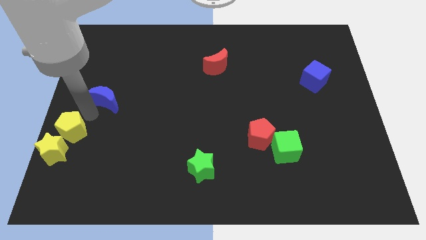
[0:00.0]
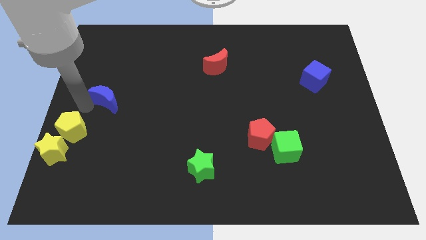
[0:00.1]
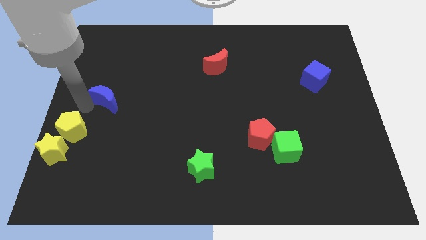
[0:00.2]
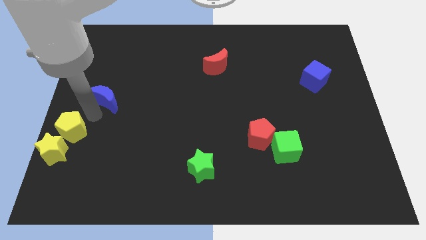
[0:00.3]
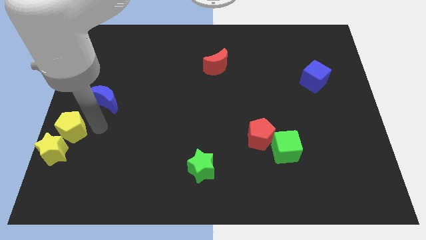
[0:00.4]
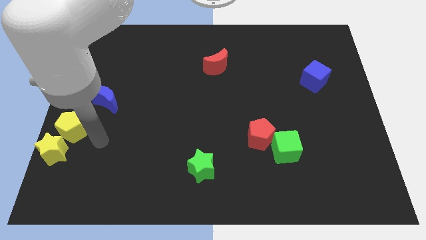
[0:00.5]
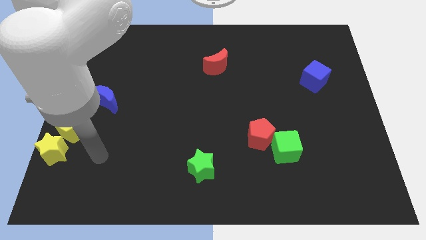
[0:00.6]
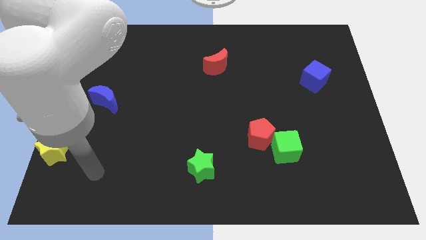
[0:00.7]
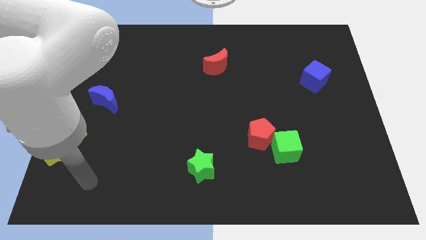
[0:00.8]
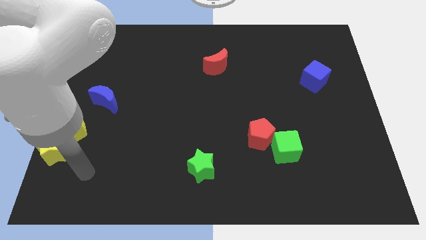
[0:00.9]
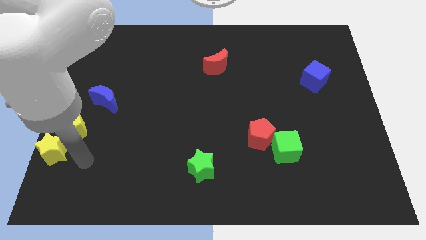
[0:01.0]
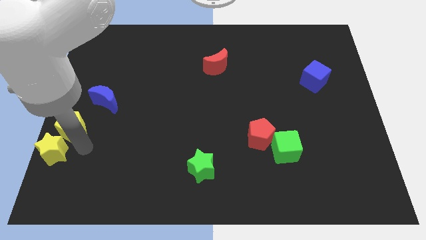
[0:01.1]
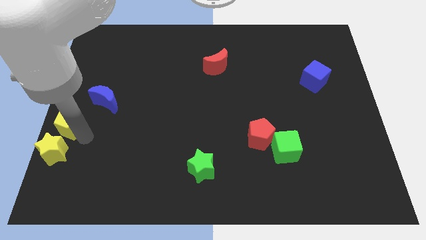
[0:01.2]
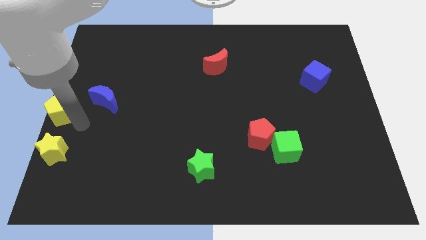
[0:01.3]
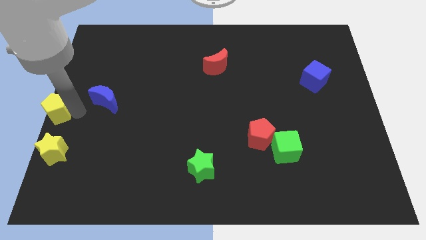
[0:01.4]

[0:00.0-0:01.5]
place the yellow pentagon on the top of the yellow star

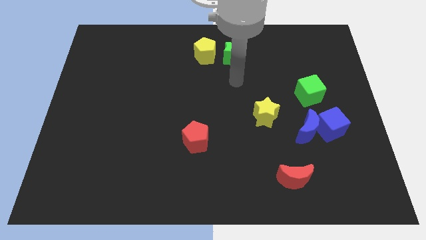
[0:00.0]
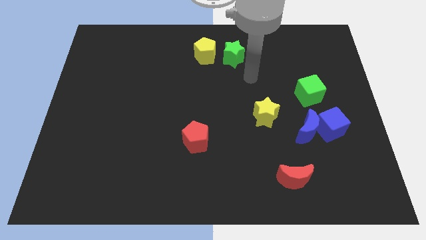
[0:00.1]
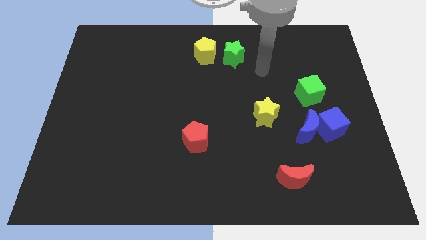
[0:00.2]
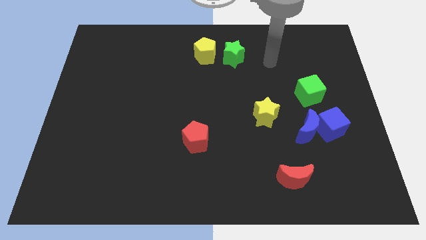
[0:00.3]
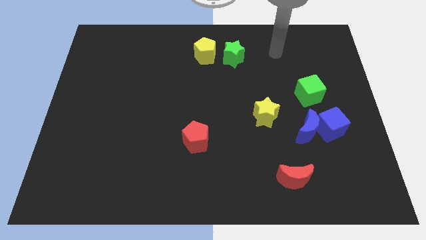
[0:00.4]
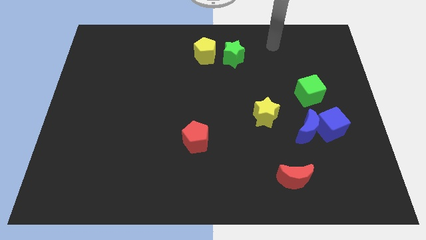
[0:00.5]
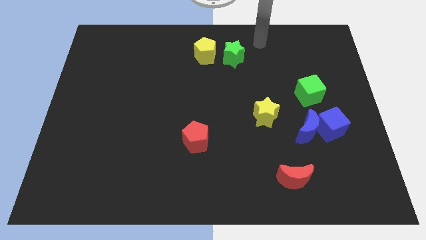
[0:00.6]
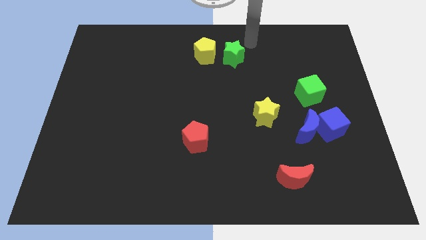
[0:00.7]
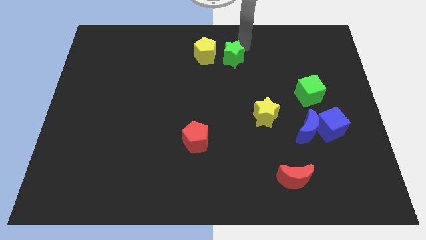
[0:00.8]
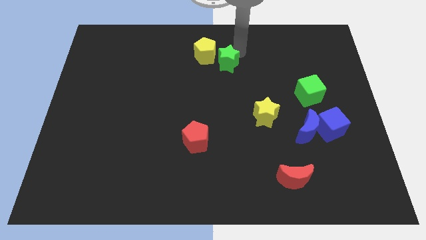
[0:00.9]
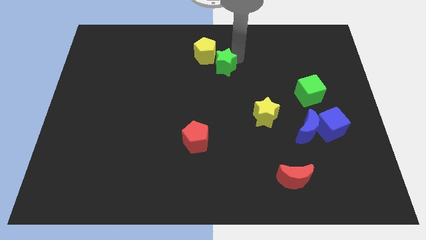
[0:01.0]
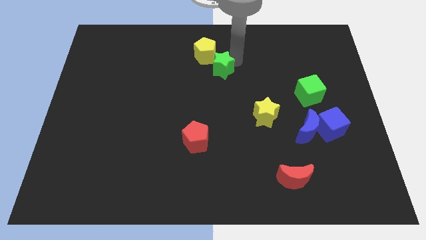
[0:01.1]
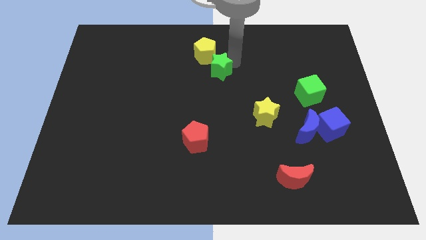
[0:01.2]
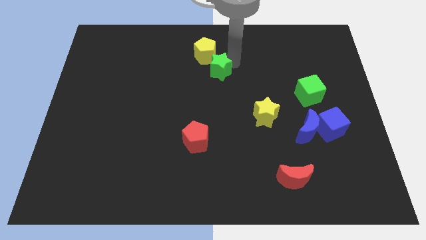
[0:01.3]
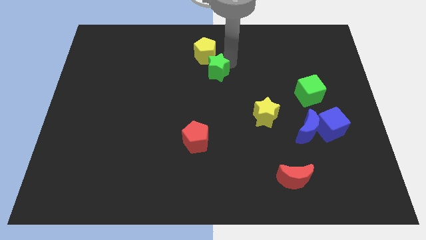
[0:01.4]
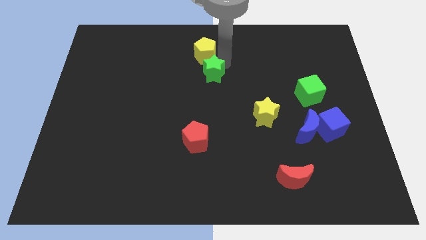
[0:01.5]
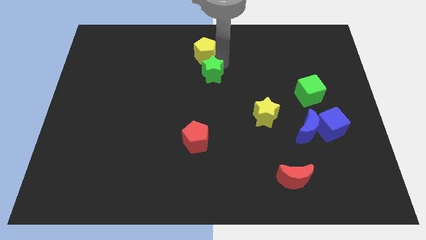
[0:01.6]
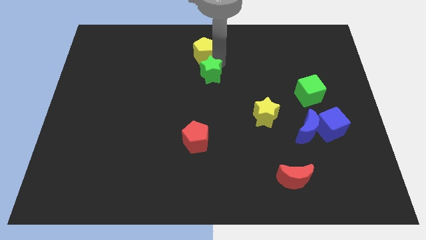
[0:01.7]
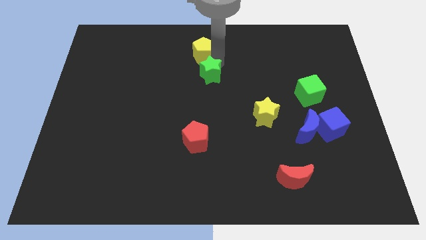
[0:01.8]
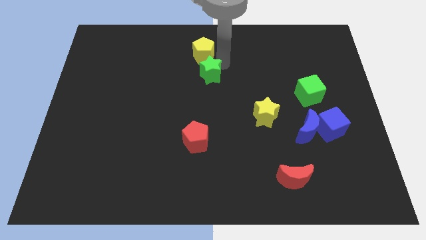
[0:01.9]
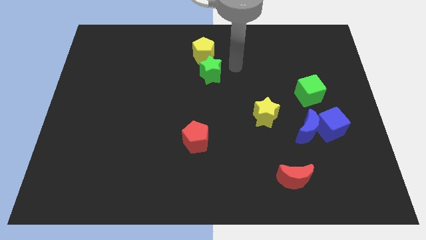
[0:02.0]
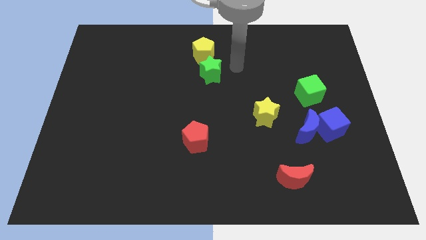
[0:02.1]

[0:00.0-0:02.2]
push the green star below yellow pentagon

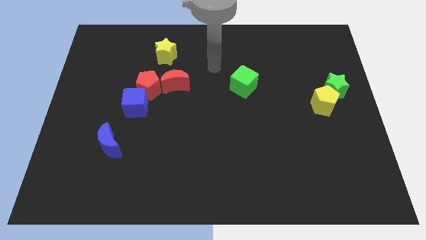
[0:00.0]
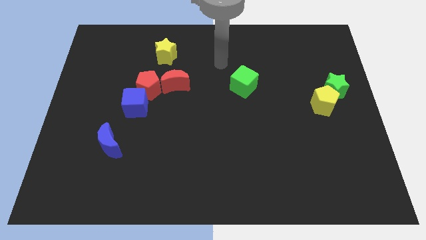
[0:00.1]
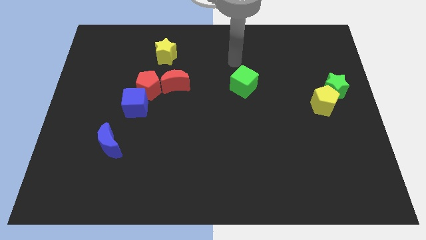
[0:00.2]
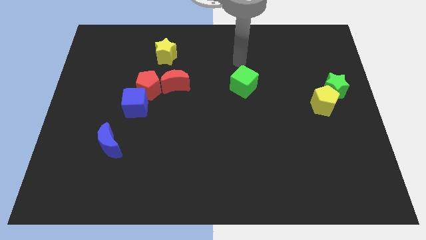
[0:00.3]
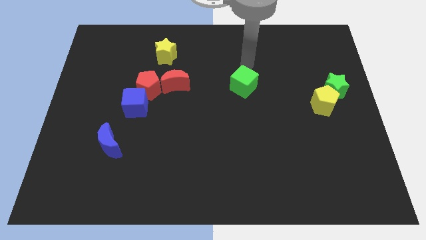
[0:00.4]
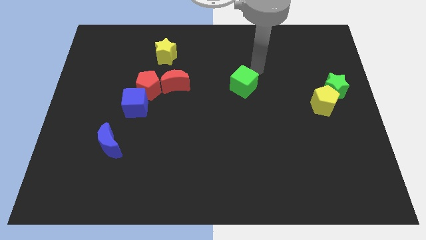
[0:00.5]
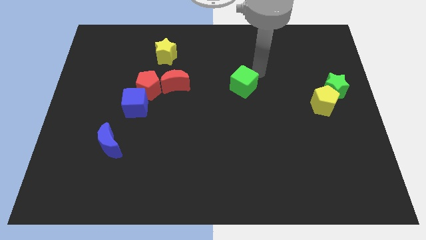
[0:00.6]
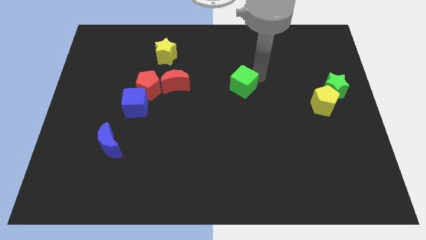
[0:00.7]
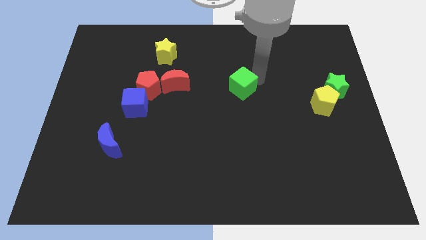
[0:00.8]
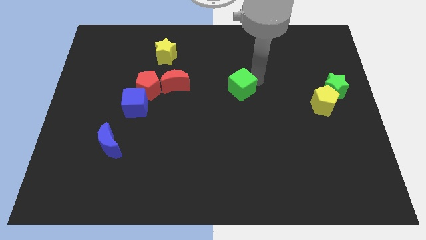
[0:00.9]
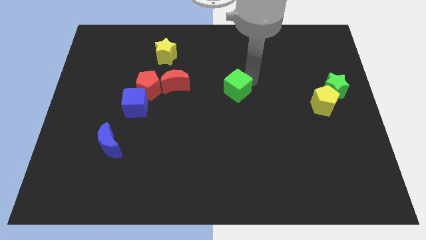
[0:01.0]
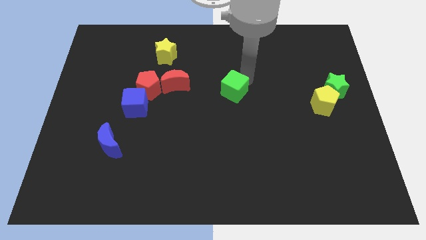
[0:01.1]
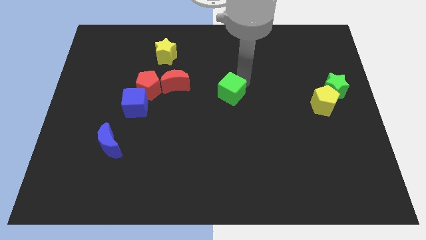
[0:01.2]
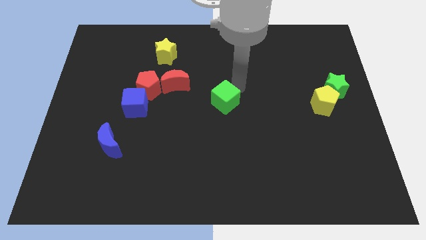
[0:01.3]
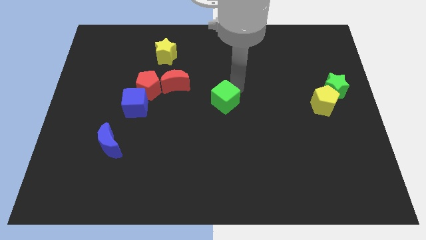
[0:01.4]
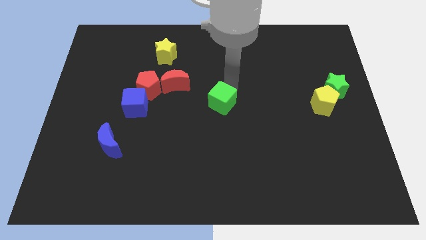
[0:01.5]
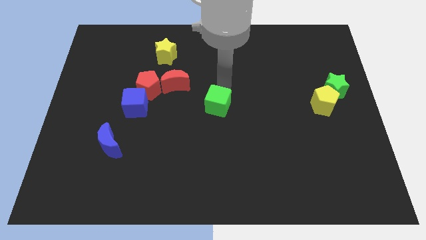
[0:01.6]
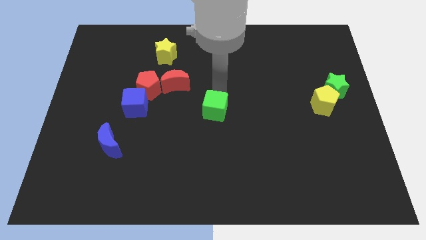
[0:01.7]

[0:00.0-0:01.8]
place the green cube right to the blue cube
